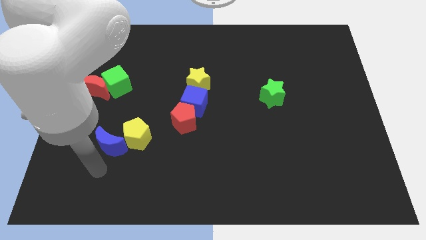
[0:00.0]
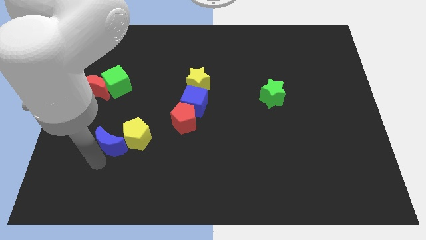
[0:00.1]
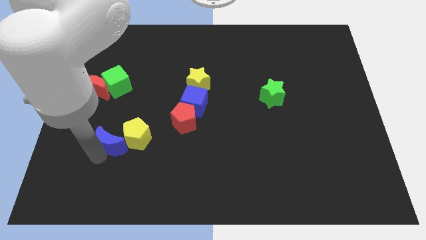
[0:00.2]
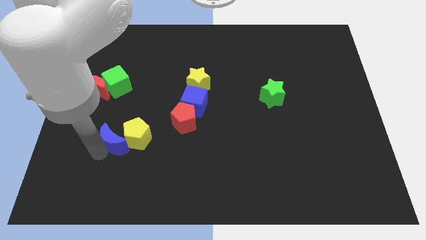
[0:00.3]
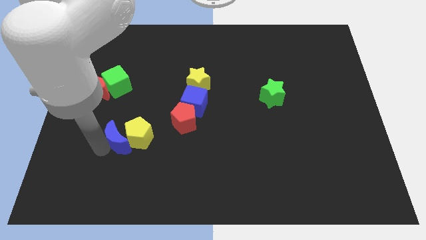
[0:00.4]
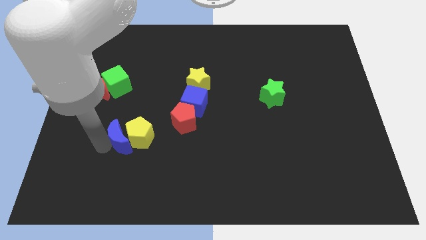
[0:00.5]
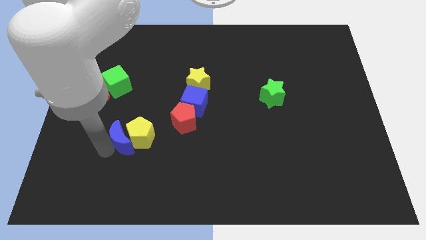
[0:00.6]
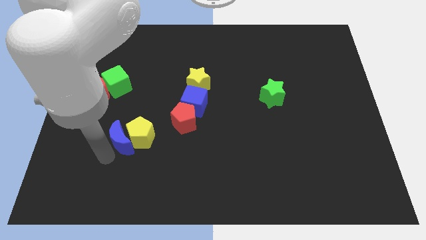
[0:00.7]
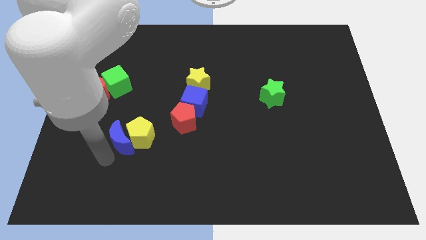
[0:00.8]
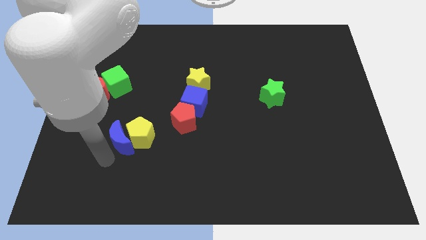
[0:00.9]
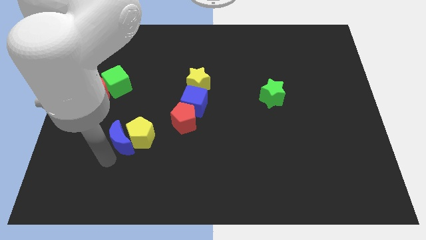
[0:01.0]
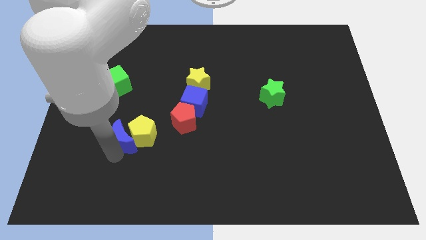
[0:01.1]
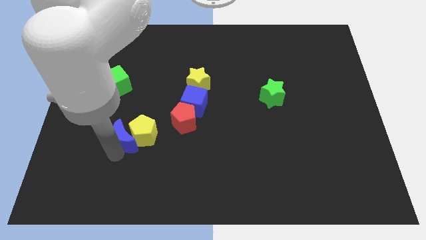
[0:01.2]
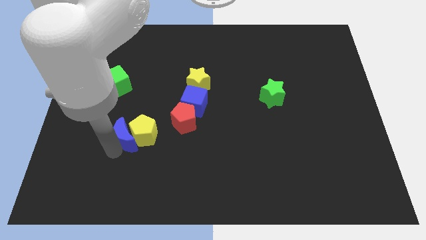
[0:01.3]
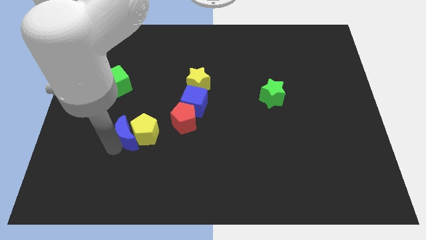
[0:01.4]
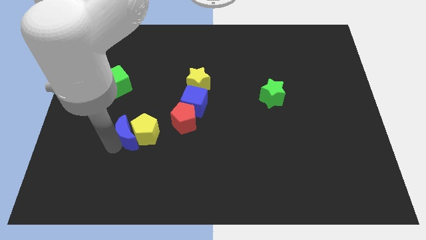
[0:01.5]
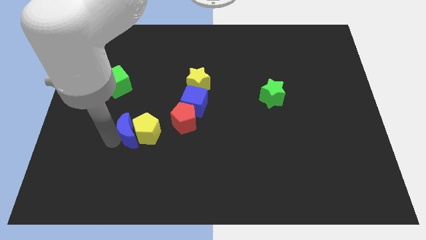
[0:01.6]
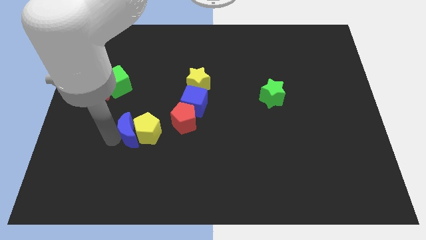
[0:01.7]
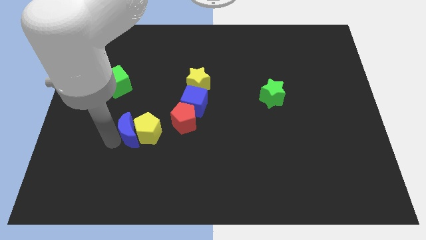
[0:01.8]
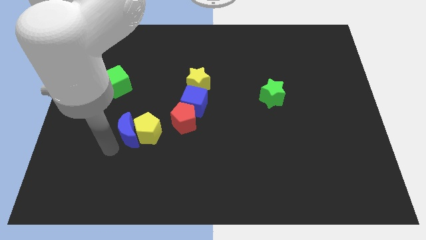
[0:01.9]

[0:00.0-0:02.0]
push the blue crescent into the yellow pentagon

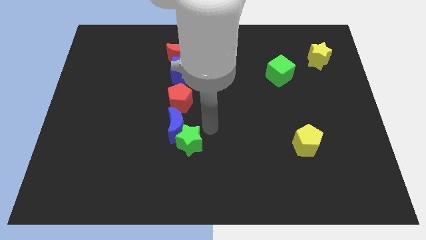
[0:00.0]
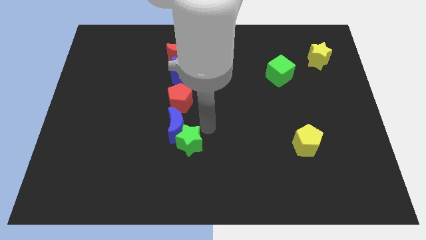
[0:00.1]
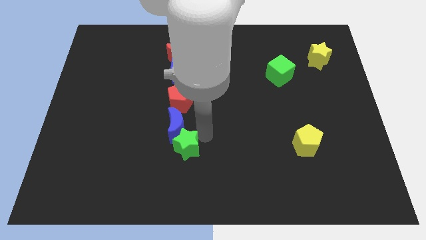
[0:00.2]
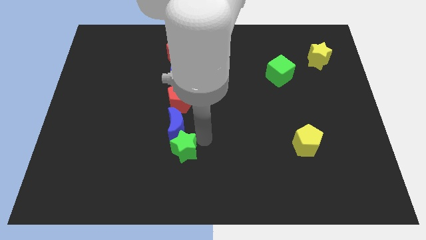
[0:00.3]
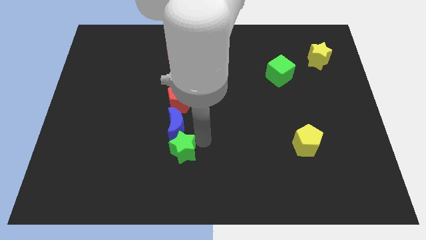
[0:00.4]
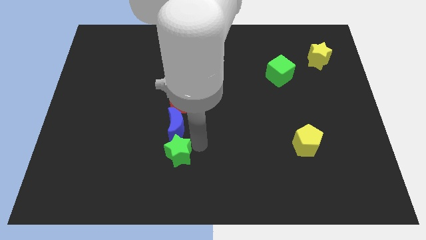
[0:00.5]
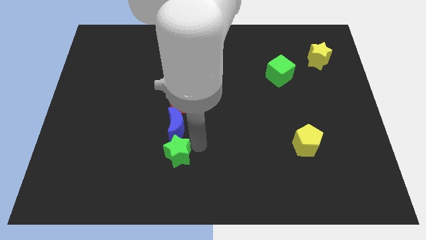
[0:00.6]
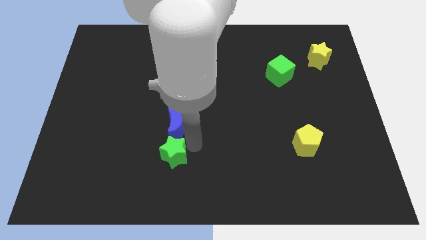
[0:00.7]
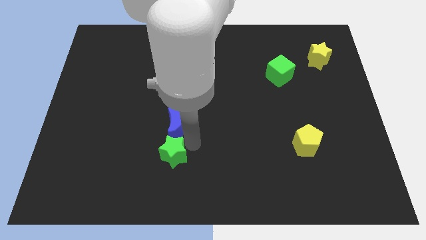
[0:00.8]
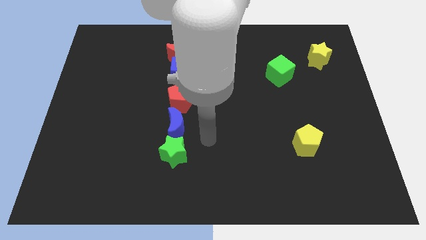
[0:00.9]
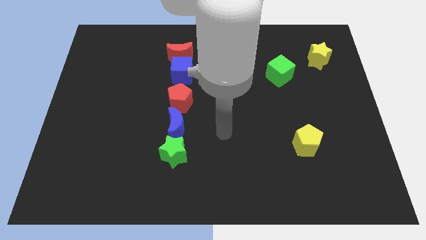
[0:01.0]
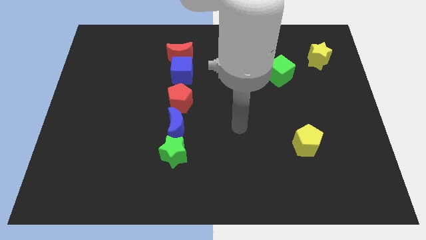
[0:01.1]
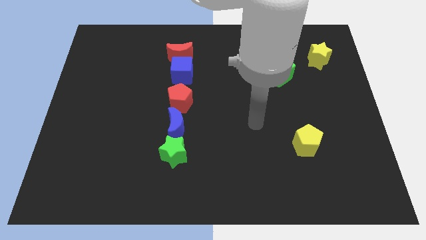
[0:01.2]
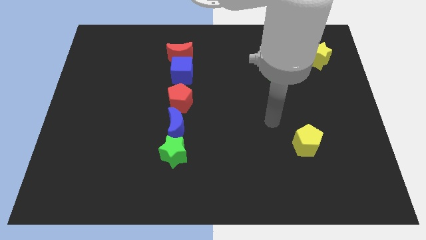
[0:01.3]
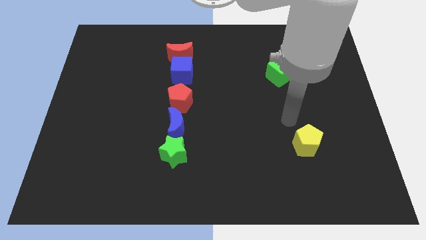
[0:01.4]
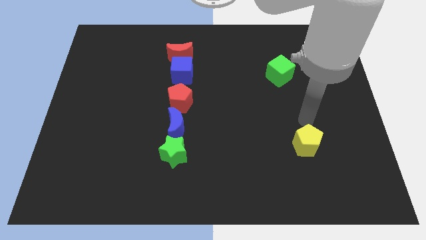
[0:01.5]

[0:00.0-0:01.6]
push the green star and make a line

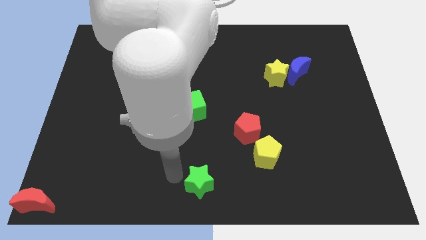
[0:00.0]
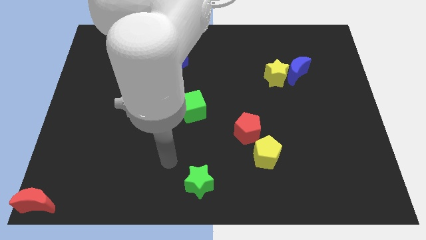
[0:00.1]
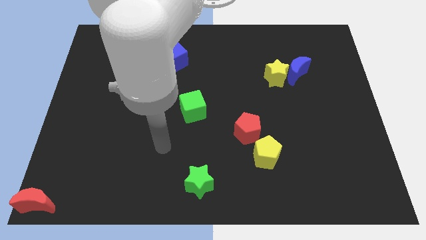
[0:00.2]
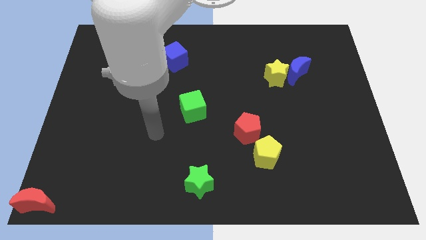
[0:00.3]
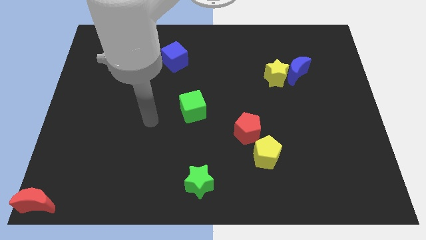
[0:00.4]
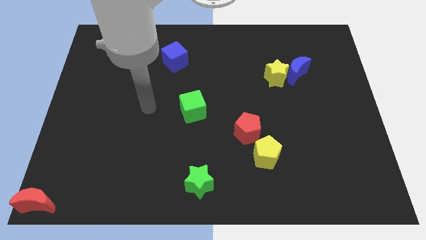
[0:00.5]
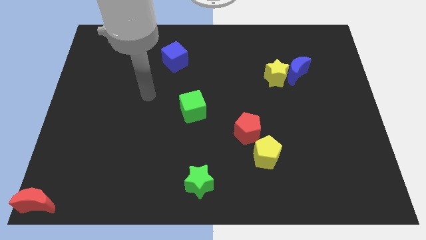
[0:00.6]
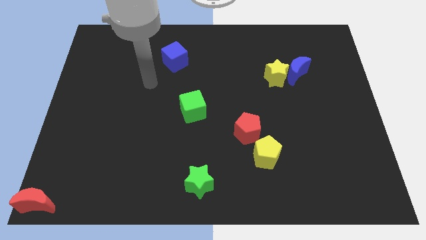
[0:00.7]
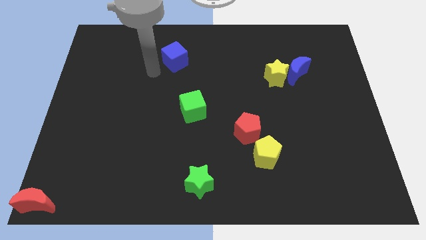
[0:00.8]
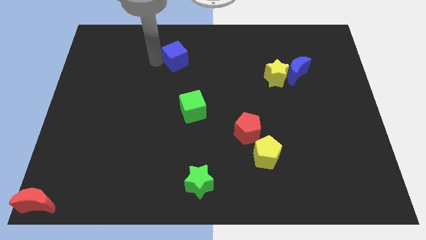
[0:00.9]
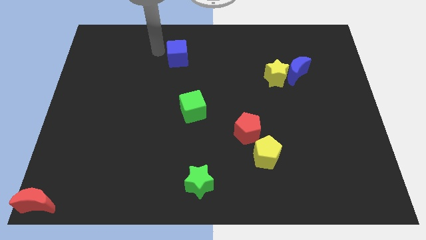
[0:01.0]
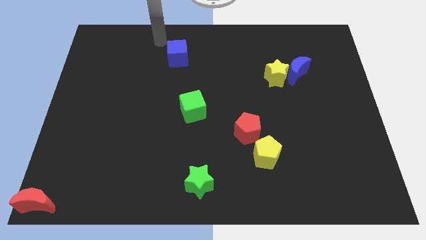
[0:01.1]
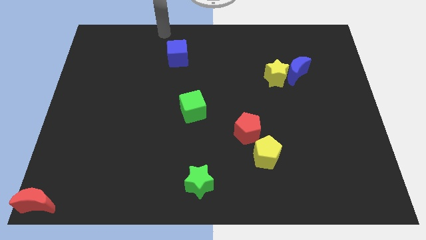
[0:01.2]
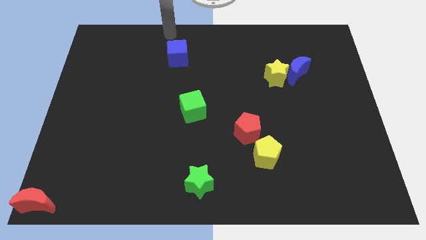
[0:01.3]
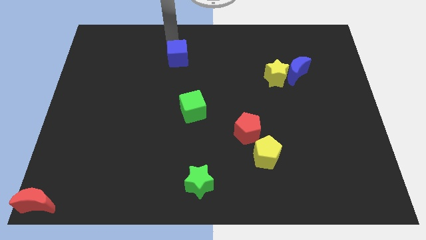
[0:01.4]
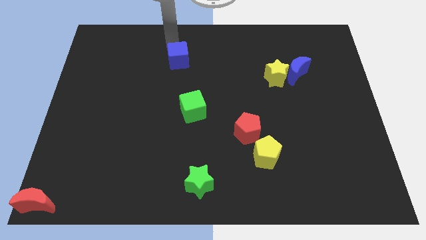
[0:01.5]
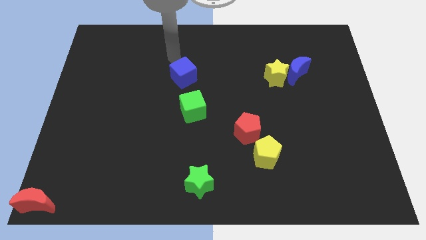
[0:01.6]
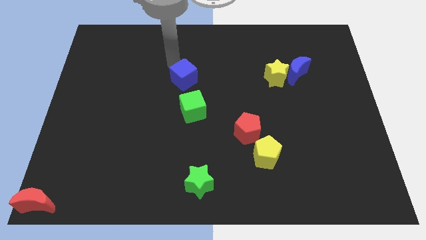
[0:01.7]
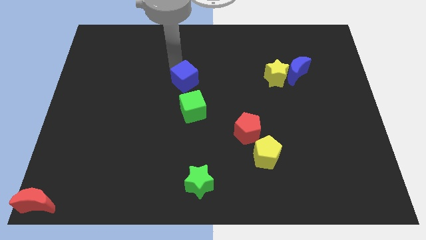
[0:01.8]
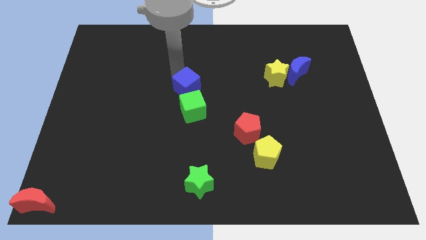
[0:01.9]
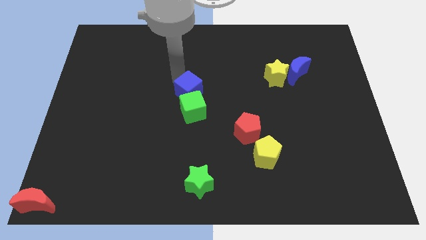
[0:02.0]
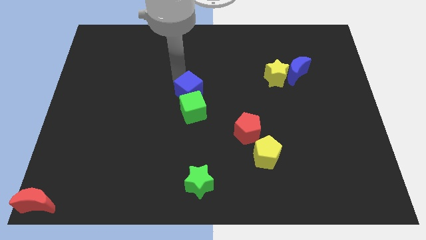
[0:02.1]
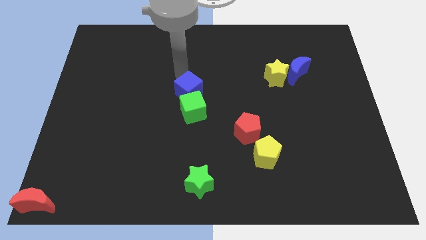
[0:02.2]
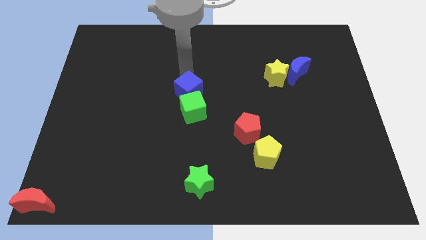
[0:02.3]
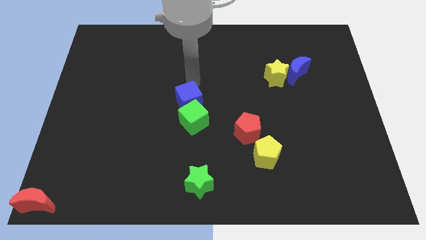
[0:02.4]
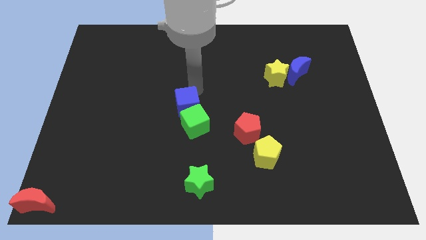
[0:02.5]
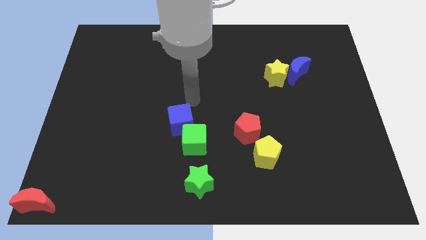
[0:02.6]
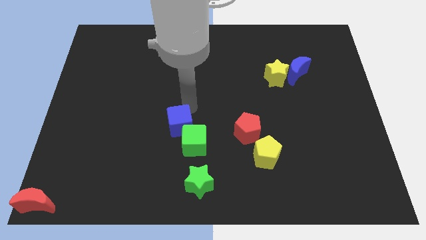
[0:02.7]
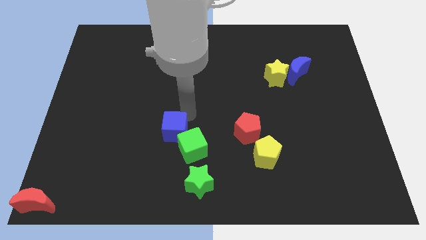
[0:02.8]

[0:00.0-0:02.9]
push the blue cube towards bottom center

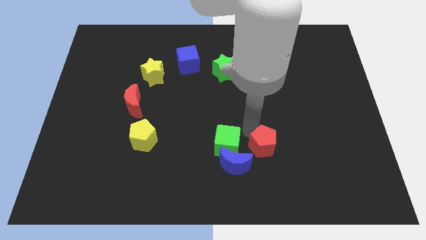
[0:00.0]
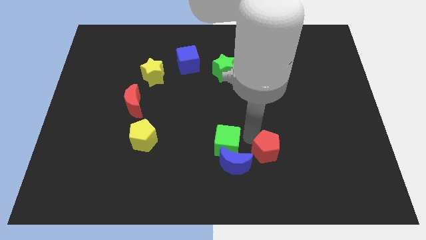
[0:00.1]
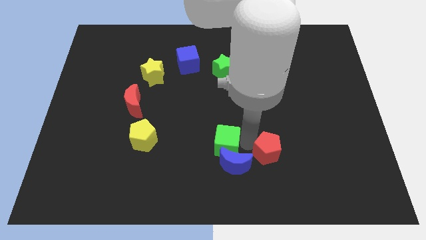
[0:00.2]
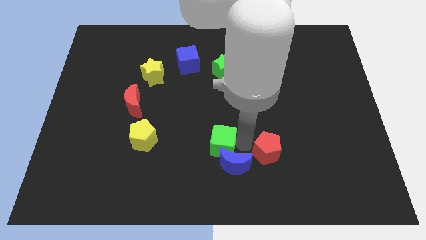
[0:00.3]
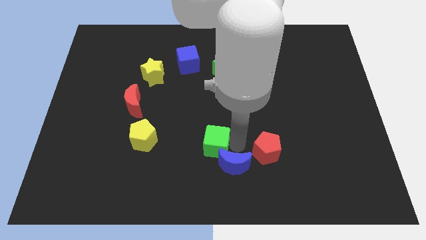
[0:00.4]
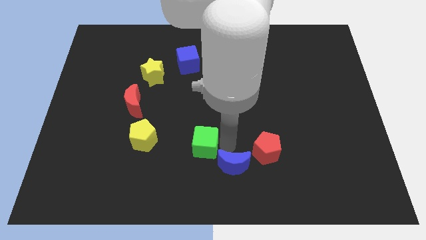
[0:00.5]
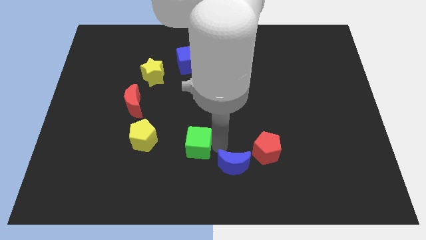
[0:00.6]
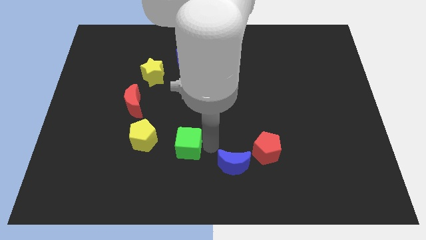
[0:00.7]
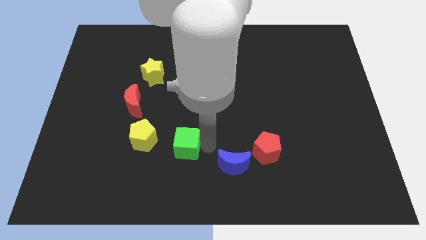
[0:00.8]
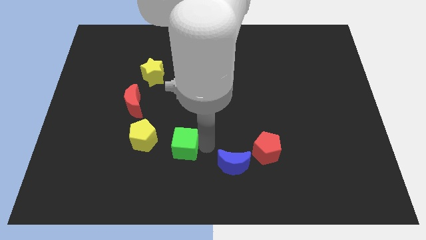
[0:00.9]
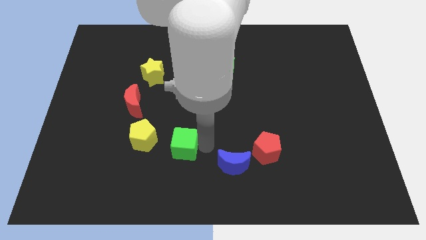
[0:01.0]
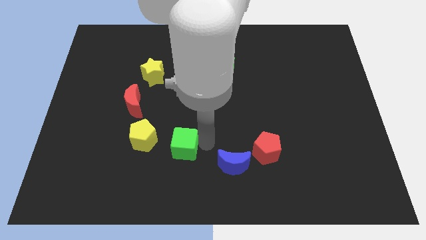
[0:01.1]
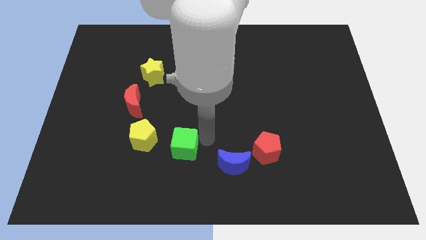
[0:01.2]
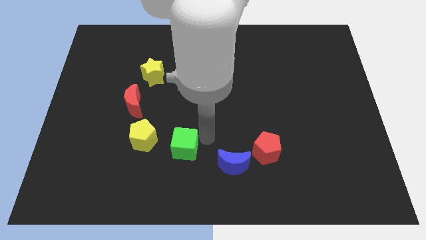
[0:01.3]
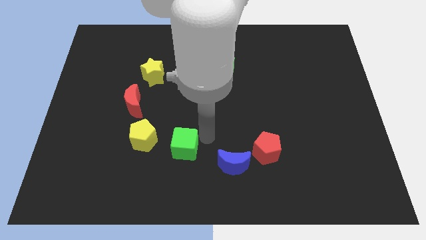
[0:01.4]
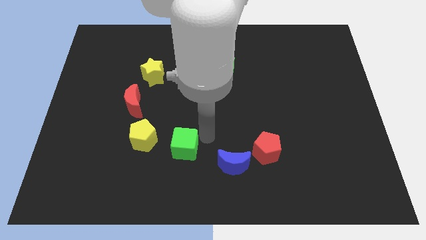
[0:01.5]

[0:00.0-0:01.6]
place the green cube parallel to the right of the yellow pentagon

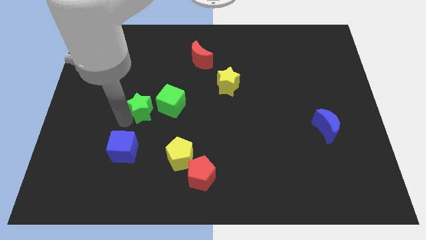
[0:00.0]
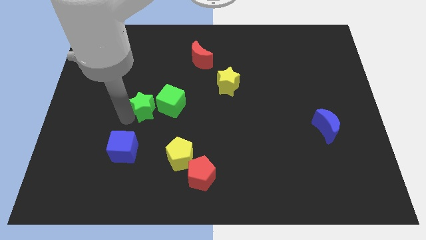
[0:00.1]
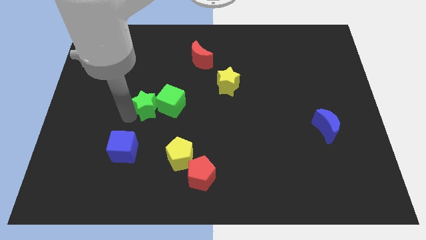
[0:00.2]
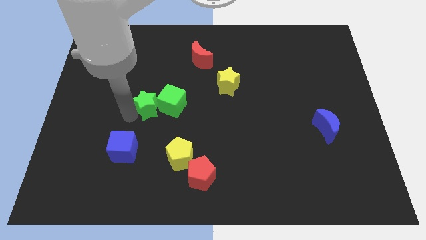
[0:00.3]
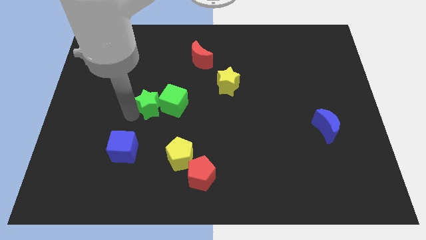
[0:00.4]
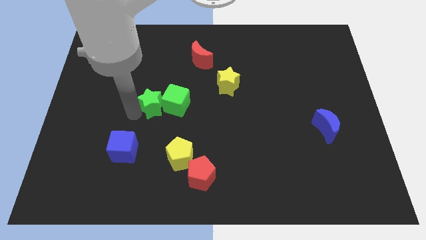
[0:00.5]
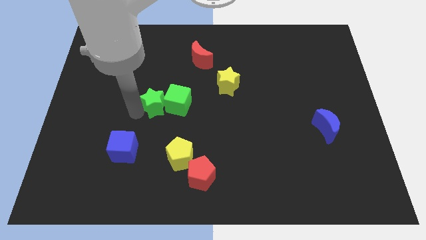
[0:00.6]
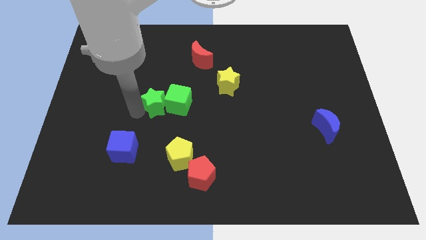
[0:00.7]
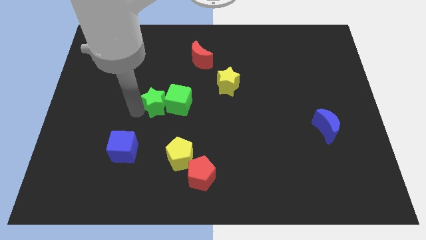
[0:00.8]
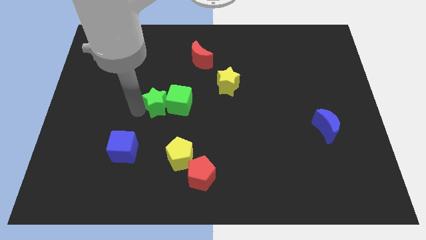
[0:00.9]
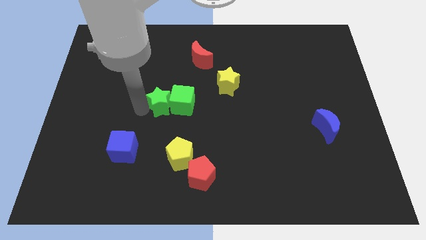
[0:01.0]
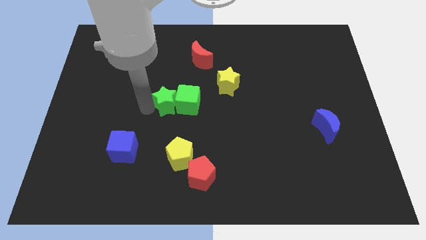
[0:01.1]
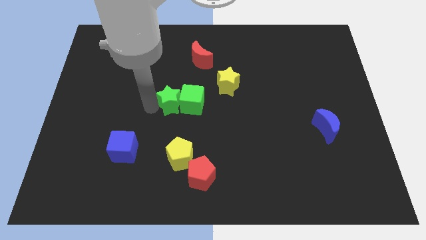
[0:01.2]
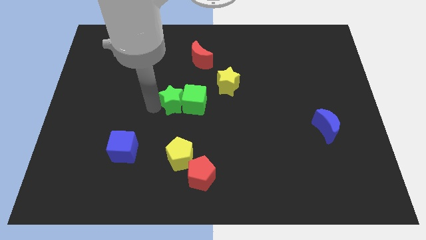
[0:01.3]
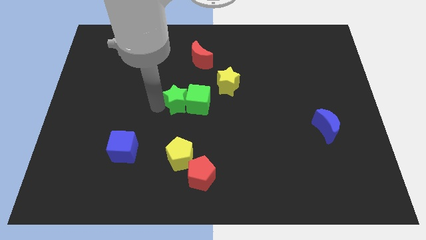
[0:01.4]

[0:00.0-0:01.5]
push the green star into the green cube
